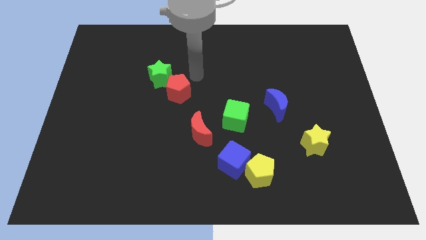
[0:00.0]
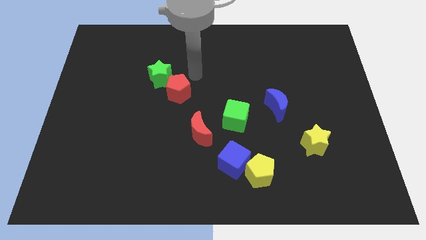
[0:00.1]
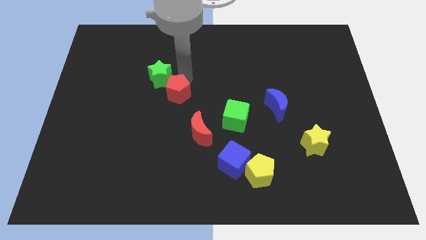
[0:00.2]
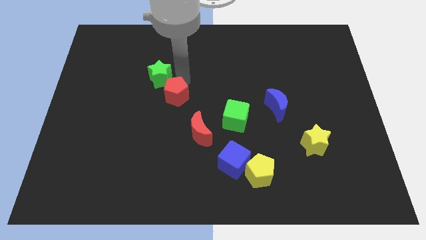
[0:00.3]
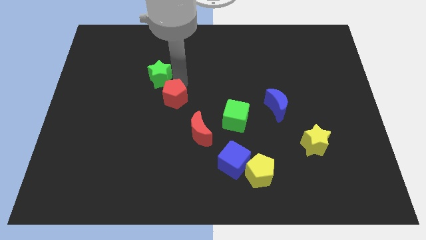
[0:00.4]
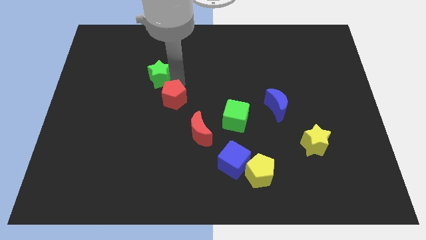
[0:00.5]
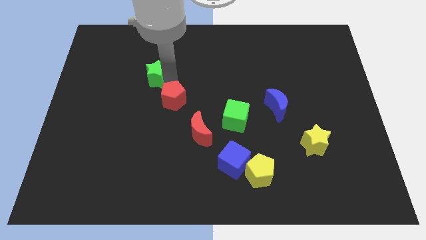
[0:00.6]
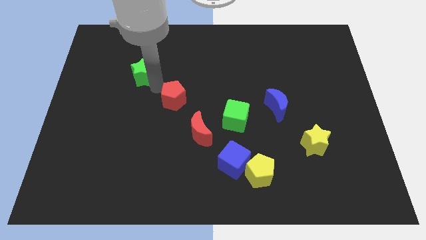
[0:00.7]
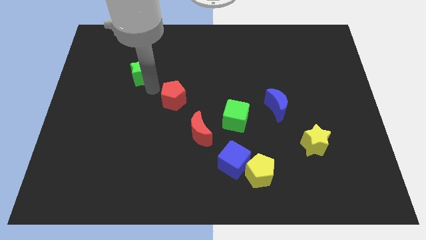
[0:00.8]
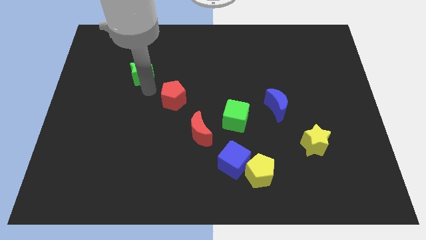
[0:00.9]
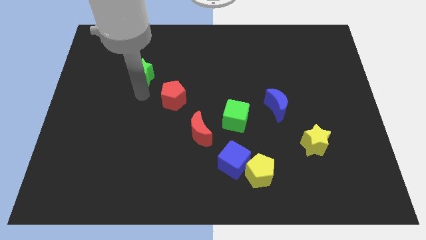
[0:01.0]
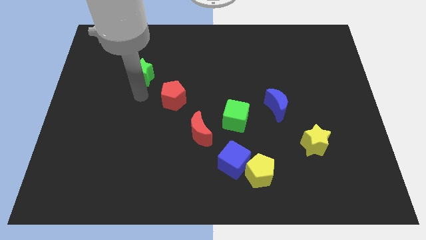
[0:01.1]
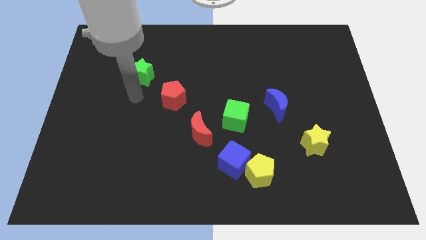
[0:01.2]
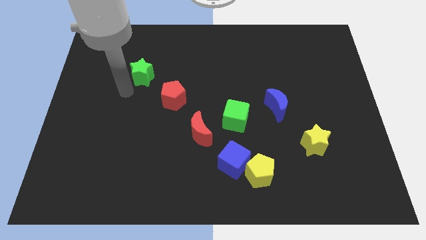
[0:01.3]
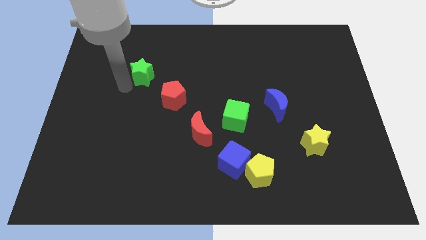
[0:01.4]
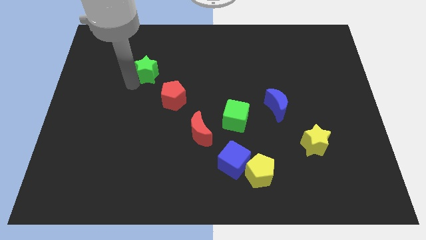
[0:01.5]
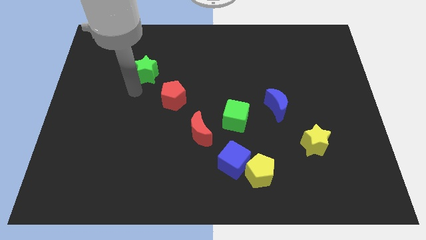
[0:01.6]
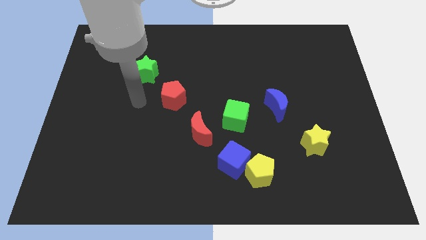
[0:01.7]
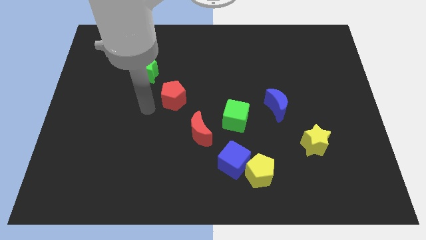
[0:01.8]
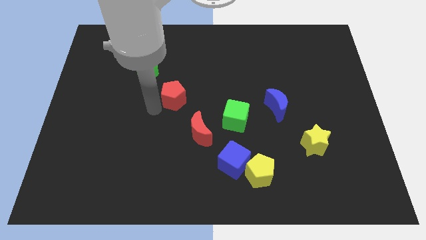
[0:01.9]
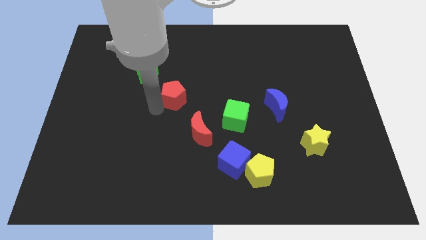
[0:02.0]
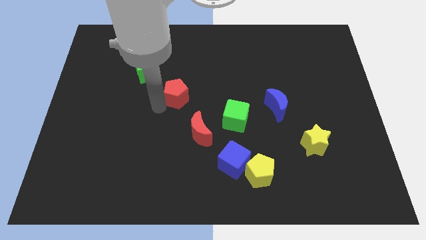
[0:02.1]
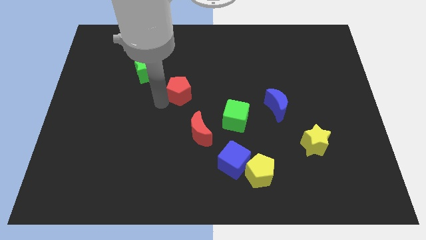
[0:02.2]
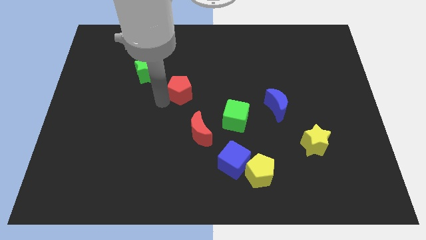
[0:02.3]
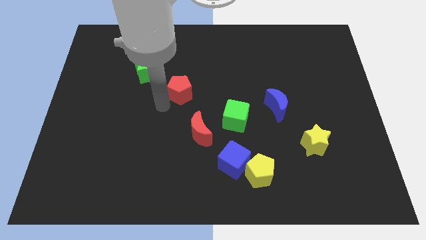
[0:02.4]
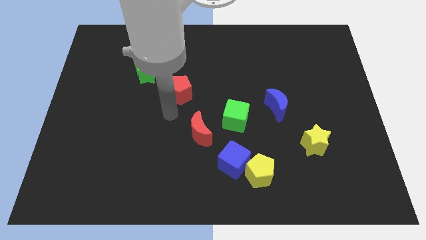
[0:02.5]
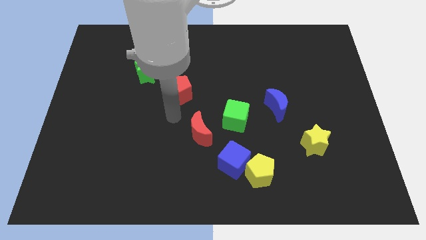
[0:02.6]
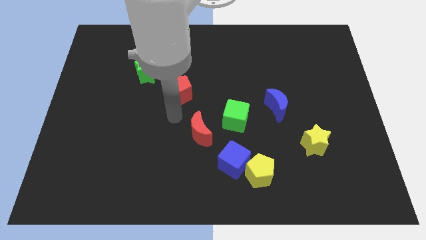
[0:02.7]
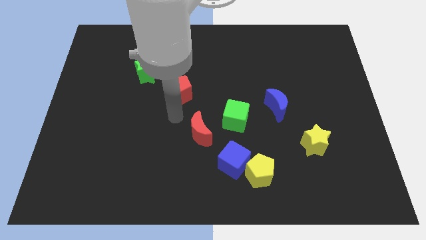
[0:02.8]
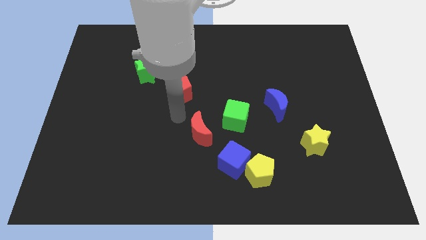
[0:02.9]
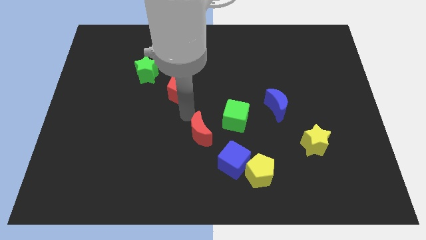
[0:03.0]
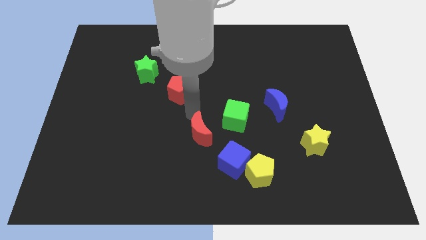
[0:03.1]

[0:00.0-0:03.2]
move the red pentagon slightly from the green star

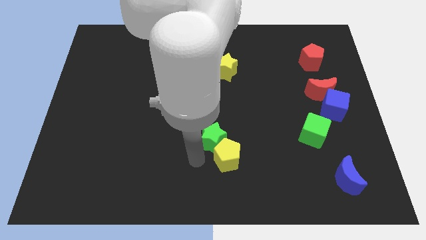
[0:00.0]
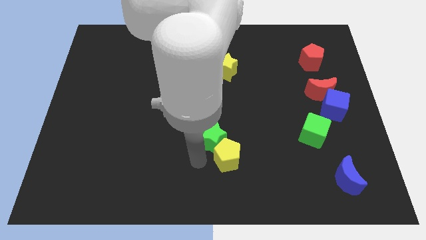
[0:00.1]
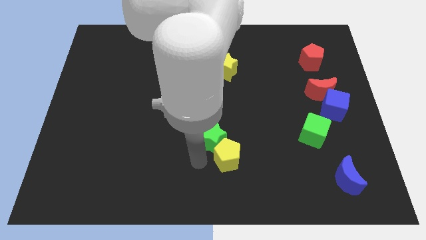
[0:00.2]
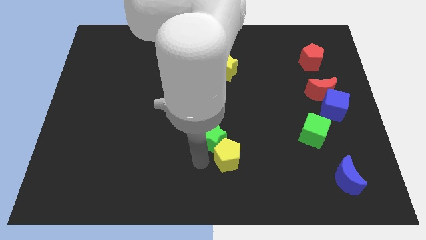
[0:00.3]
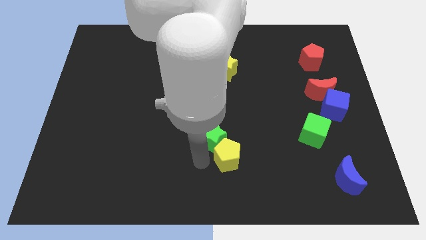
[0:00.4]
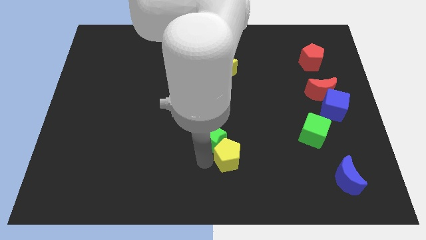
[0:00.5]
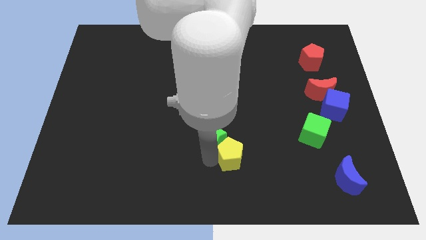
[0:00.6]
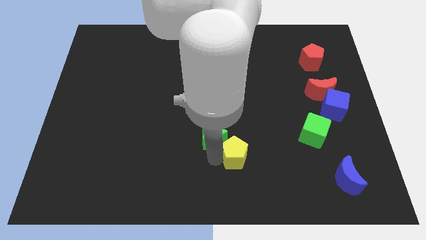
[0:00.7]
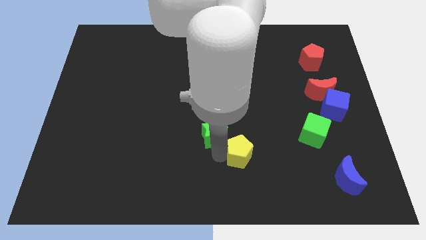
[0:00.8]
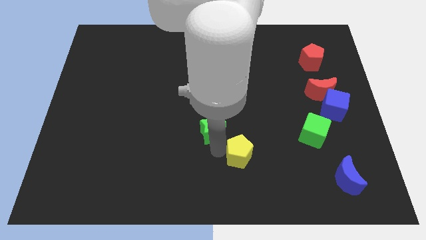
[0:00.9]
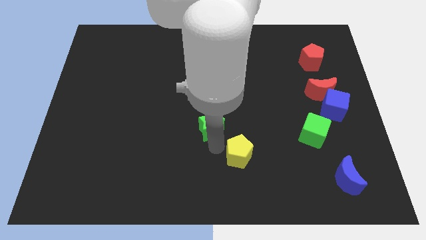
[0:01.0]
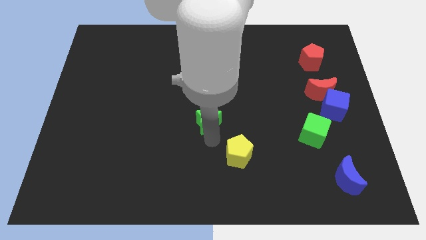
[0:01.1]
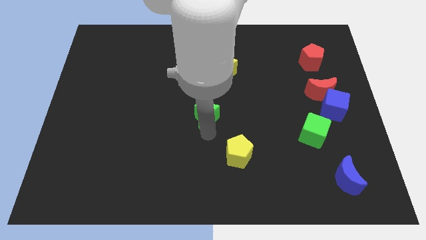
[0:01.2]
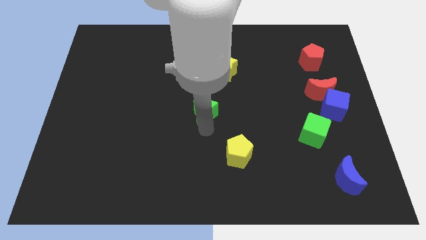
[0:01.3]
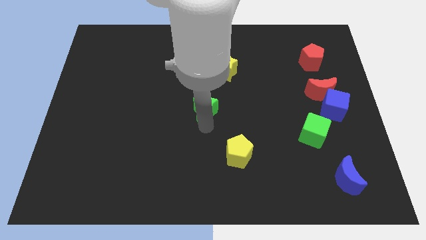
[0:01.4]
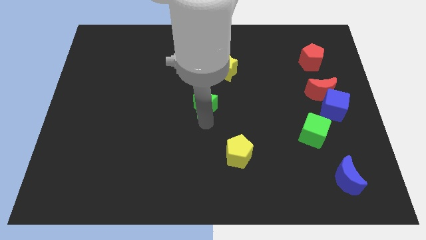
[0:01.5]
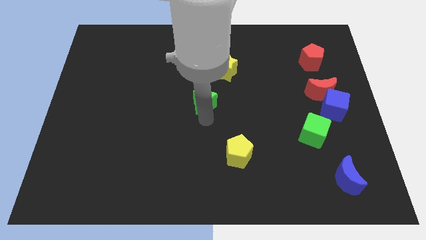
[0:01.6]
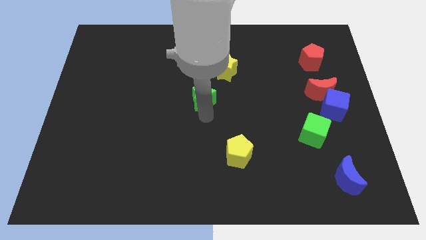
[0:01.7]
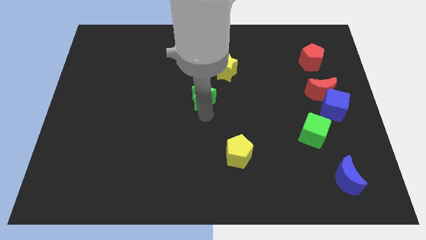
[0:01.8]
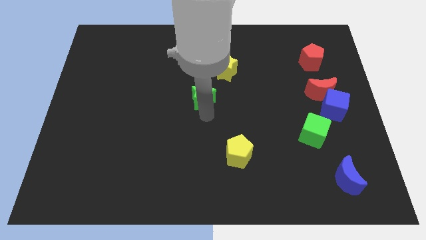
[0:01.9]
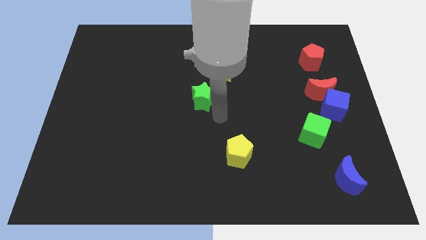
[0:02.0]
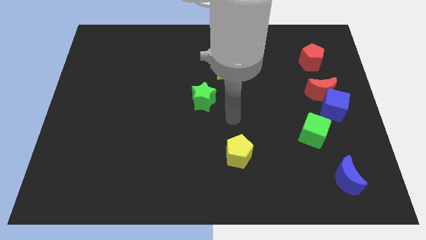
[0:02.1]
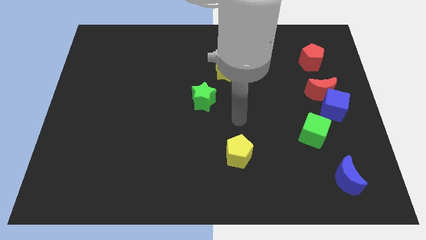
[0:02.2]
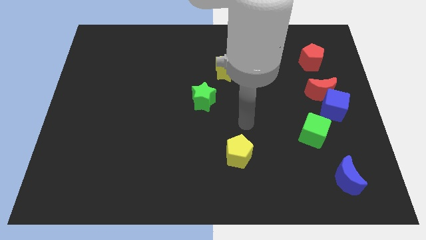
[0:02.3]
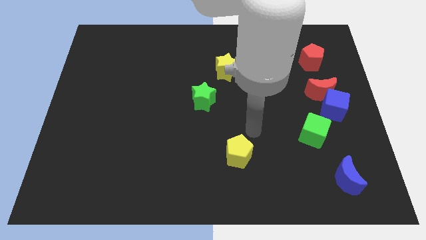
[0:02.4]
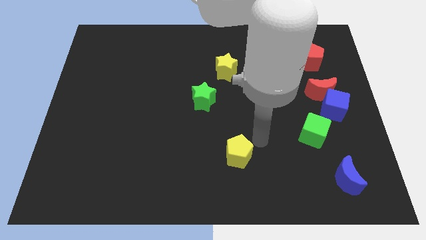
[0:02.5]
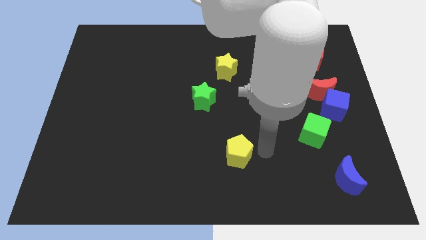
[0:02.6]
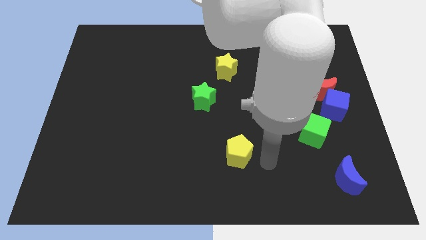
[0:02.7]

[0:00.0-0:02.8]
place the green star left to the red moon

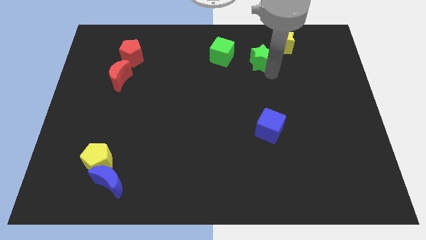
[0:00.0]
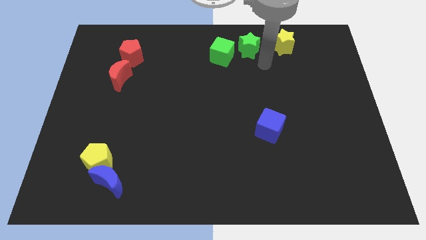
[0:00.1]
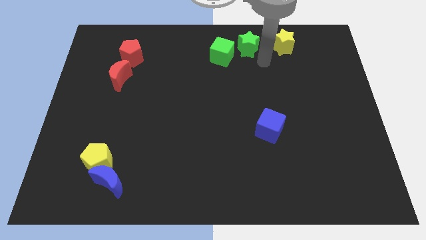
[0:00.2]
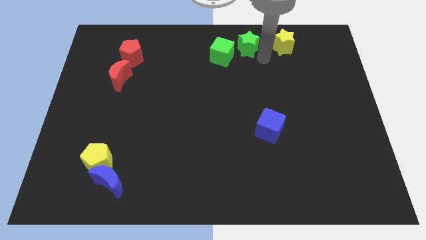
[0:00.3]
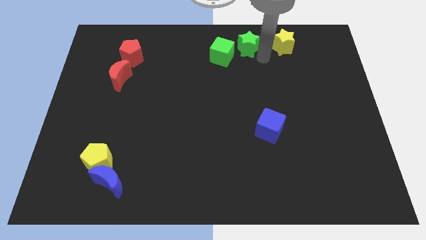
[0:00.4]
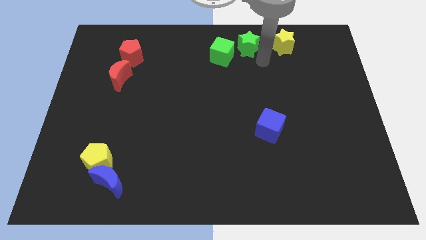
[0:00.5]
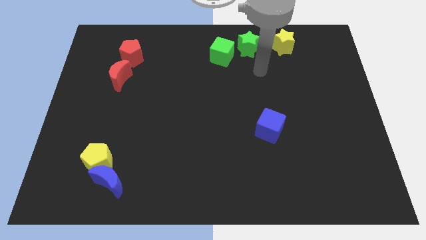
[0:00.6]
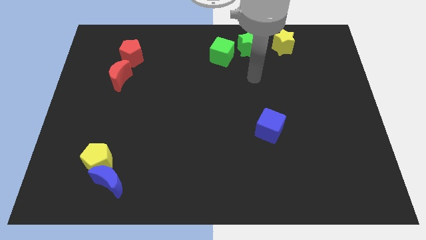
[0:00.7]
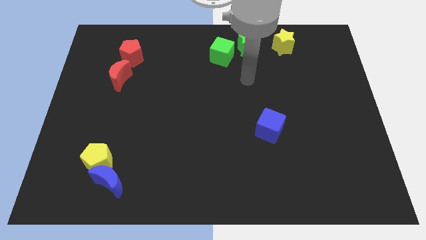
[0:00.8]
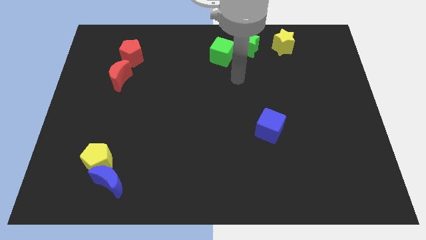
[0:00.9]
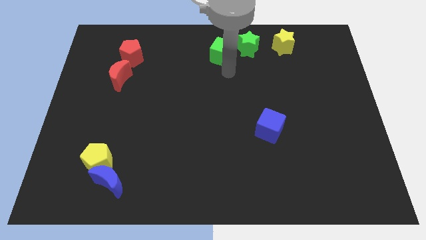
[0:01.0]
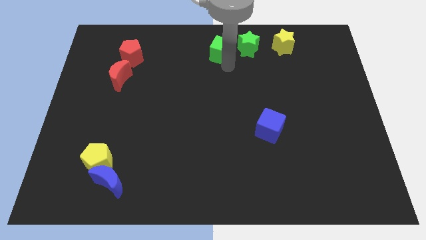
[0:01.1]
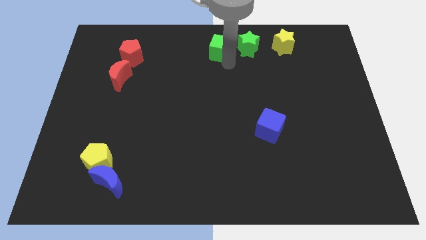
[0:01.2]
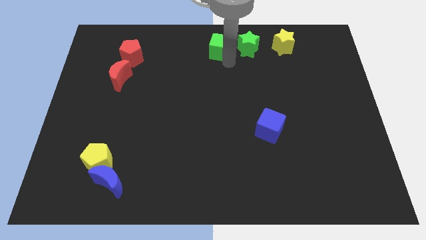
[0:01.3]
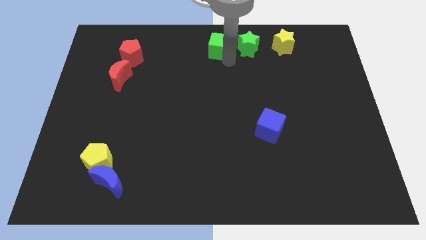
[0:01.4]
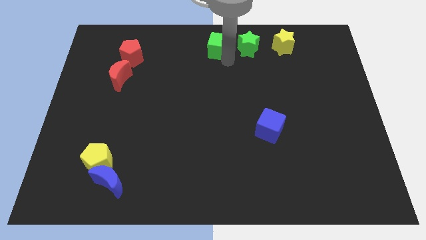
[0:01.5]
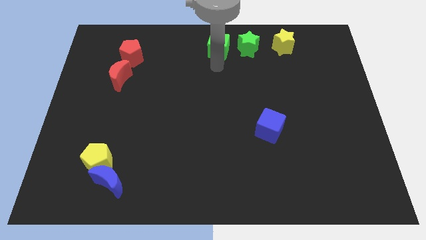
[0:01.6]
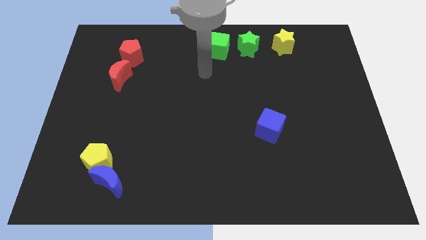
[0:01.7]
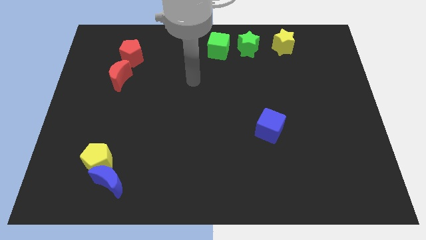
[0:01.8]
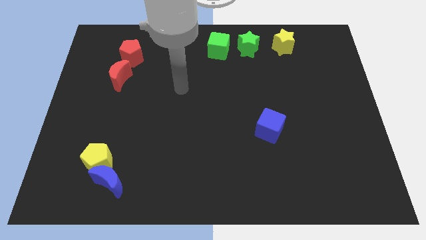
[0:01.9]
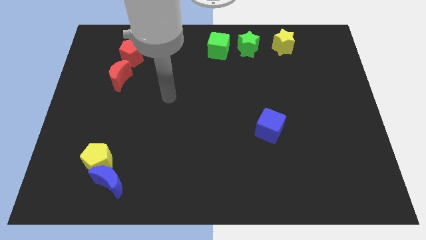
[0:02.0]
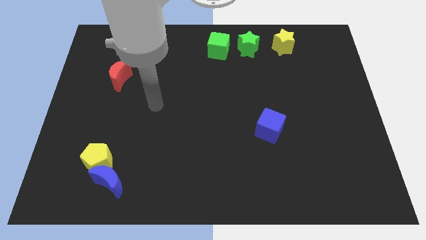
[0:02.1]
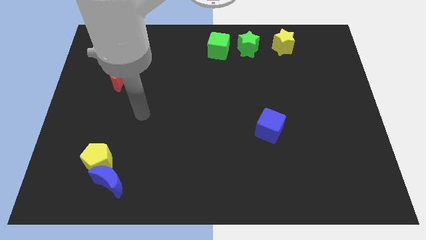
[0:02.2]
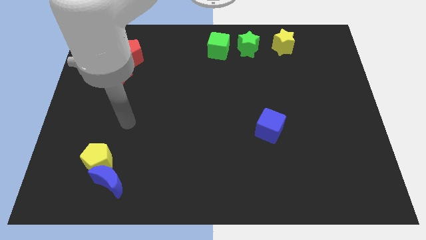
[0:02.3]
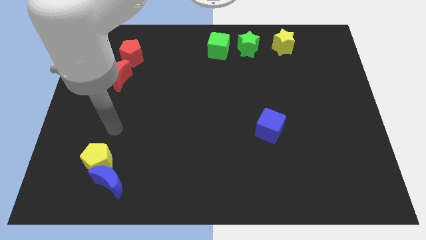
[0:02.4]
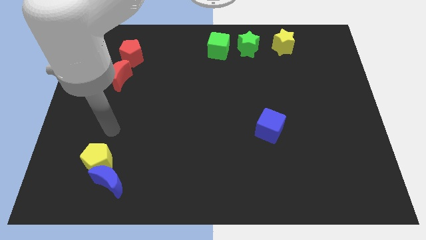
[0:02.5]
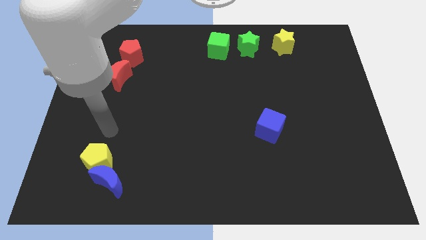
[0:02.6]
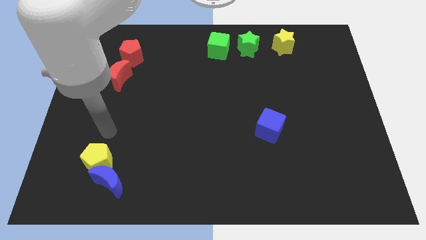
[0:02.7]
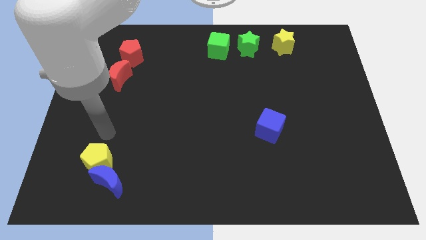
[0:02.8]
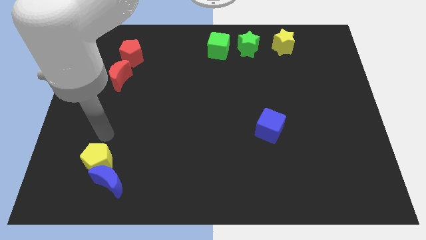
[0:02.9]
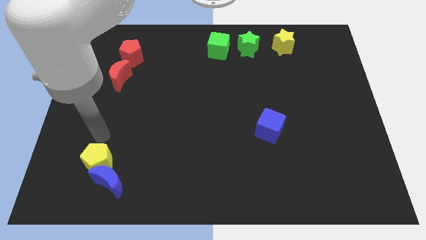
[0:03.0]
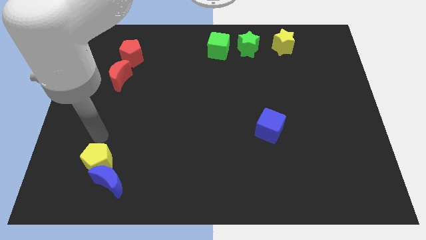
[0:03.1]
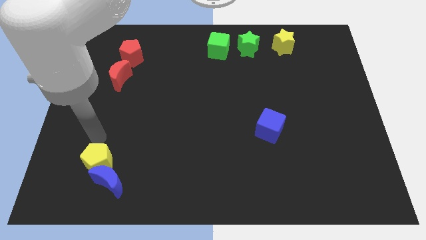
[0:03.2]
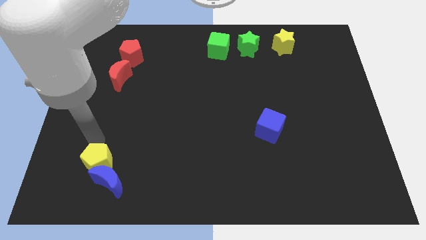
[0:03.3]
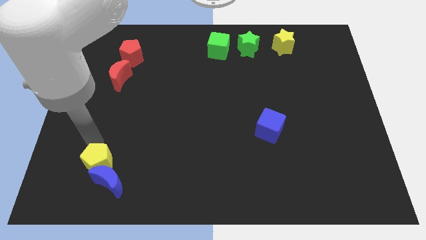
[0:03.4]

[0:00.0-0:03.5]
push the green blocks upwards to form a line with yellow star horizontally
